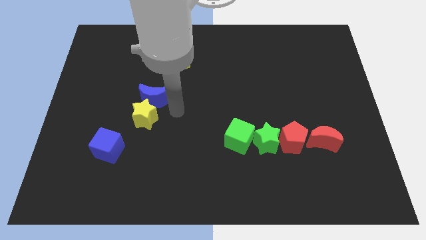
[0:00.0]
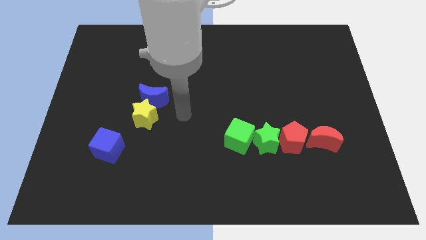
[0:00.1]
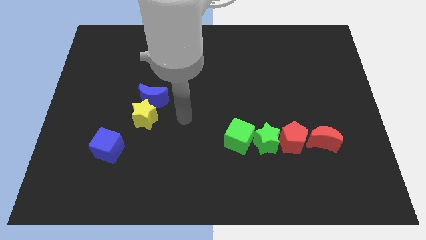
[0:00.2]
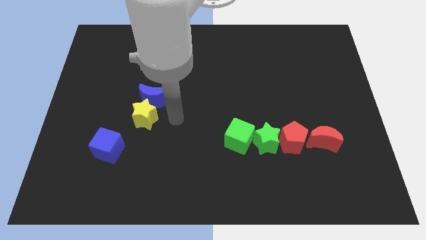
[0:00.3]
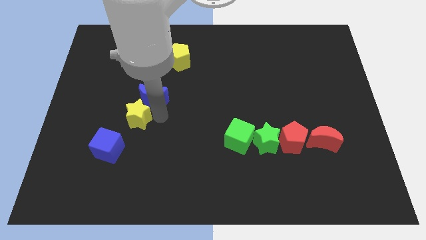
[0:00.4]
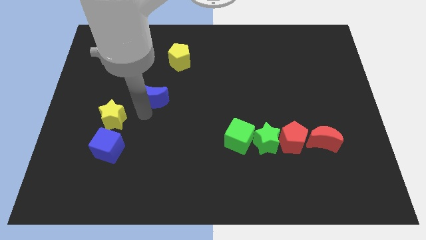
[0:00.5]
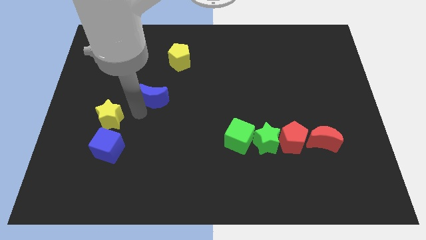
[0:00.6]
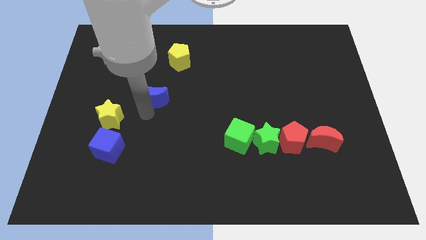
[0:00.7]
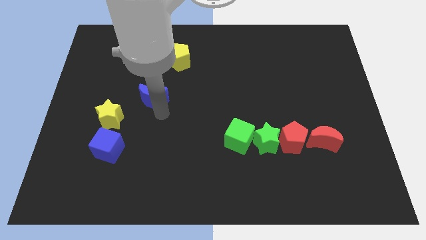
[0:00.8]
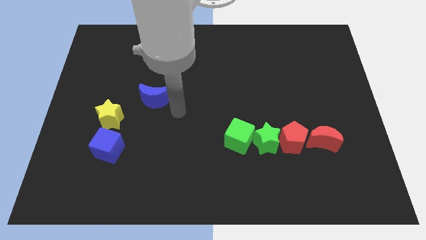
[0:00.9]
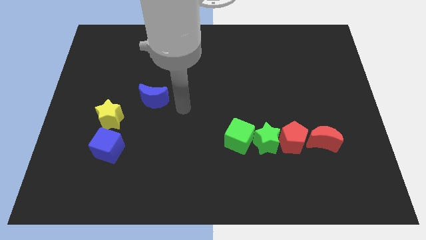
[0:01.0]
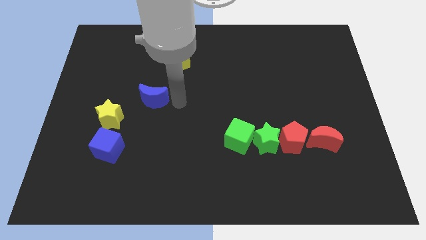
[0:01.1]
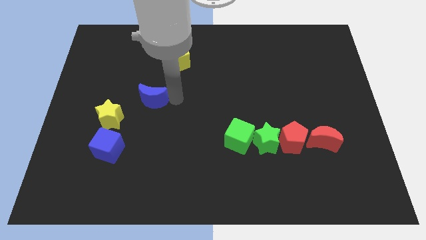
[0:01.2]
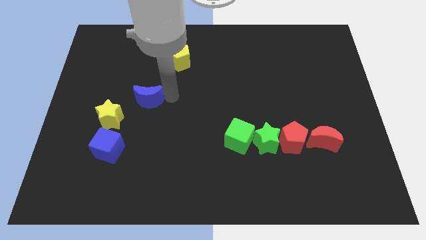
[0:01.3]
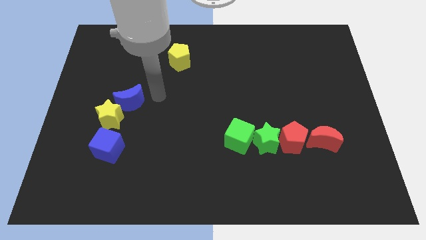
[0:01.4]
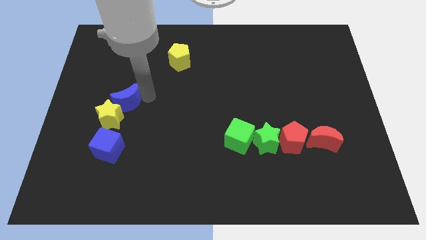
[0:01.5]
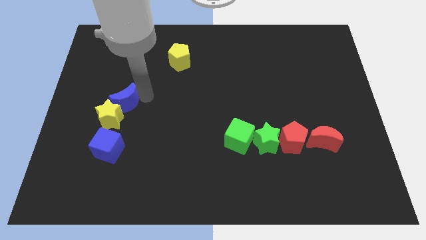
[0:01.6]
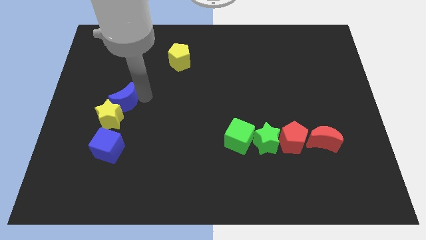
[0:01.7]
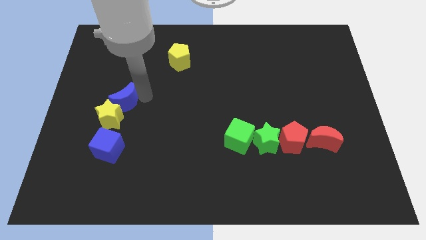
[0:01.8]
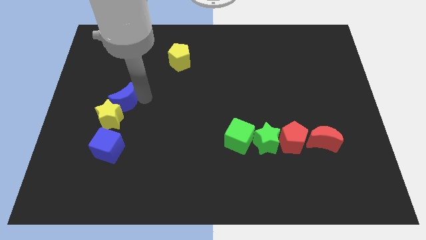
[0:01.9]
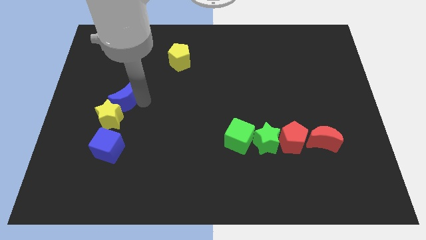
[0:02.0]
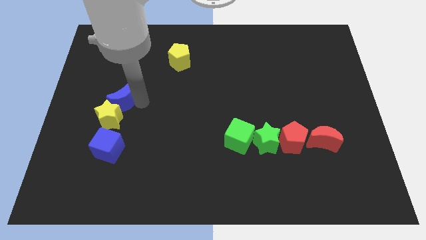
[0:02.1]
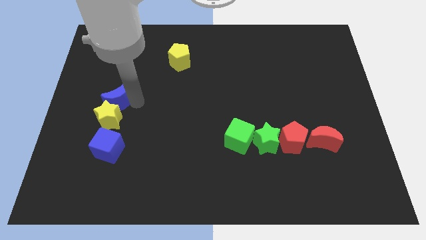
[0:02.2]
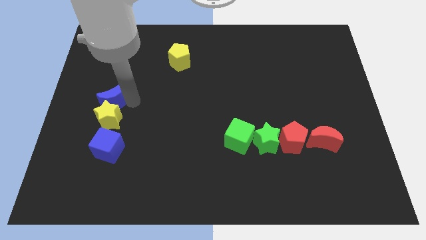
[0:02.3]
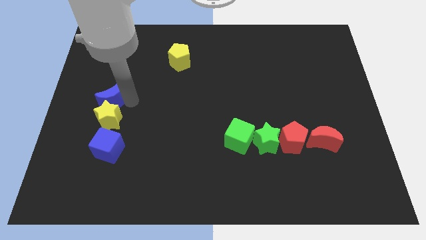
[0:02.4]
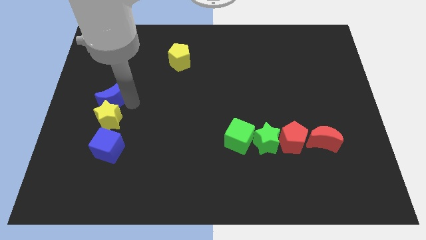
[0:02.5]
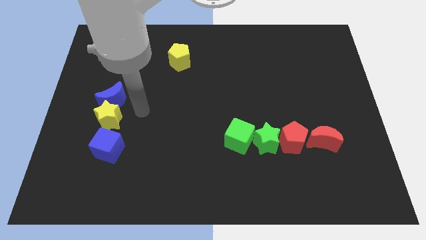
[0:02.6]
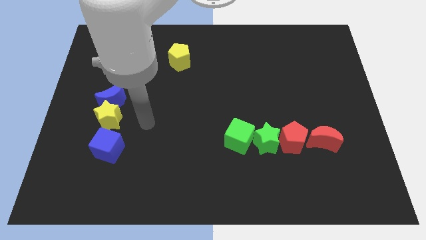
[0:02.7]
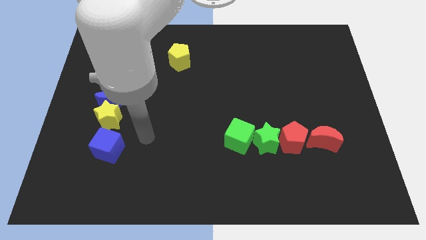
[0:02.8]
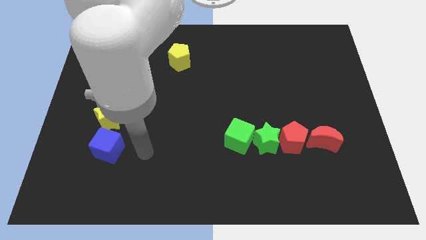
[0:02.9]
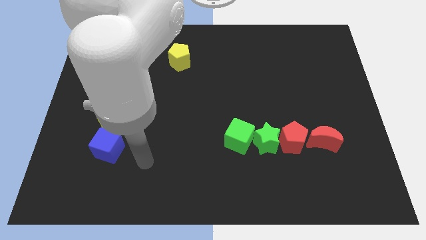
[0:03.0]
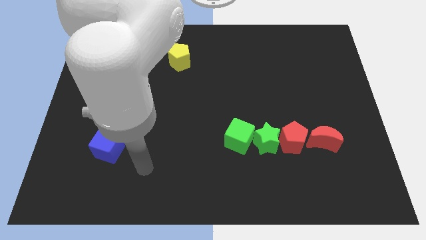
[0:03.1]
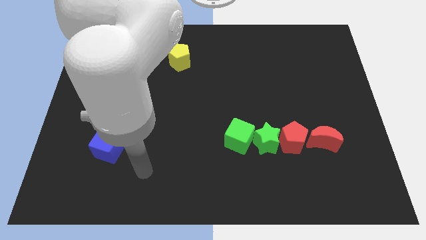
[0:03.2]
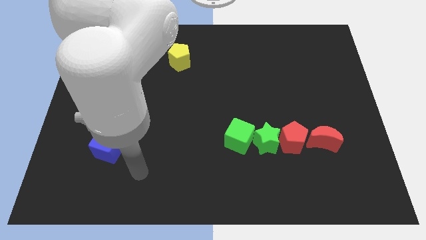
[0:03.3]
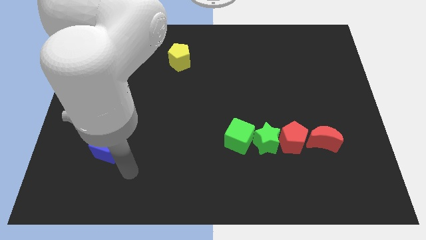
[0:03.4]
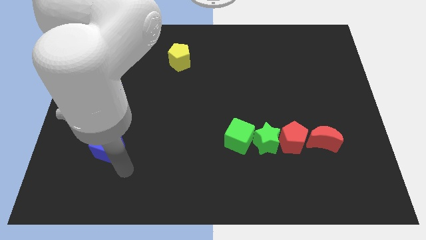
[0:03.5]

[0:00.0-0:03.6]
place the blue crescent on top of the yellow star to form a vertical line

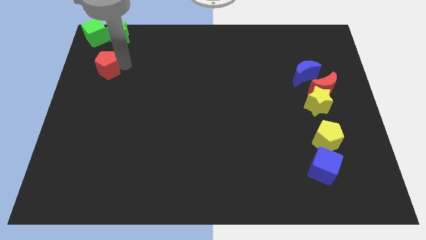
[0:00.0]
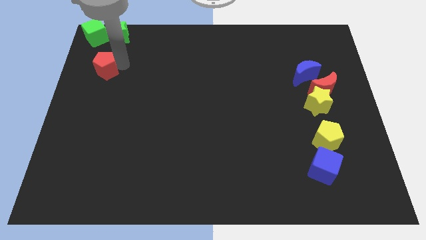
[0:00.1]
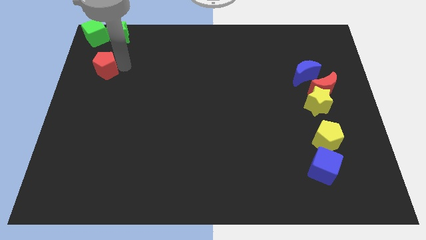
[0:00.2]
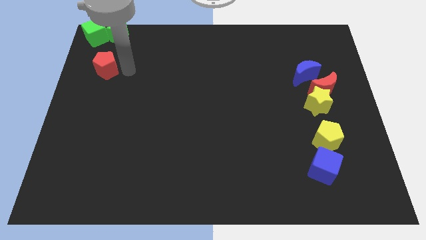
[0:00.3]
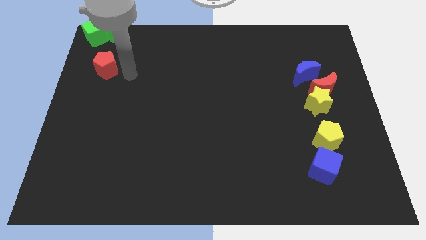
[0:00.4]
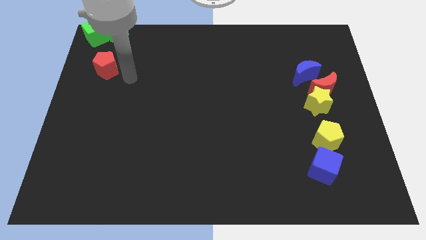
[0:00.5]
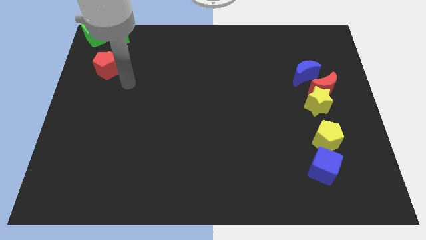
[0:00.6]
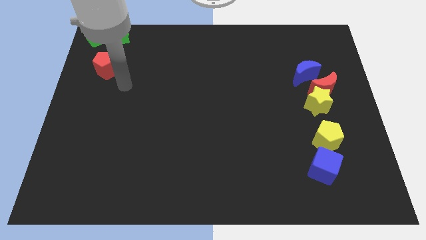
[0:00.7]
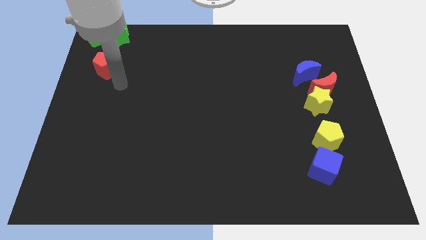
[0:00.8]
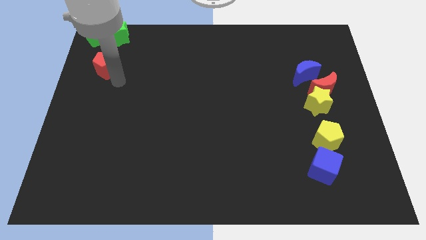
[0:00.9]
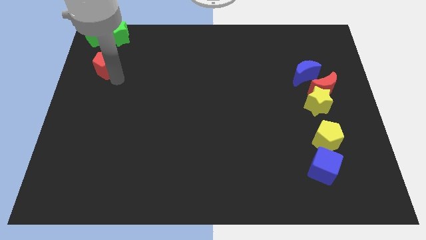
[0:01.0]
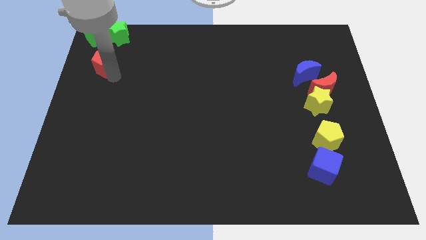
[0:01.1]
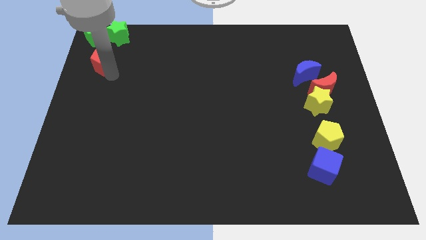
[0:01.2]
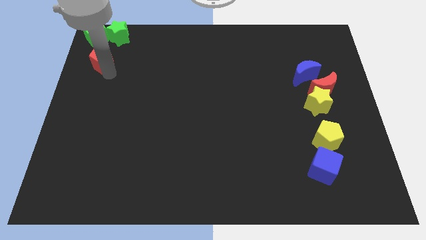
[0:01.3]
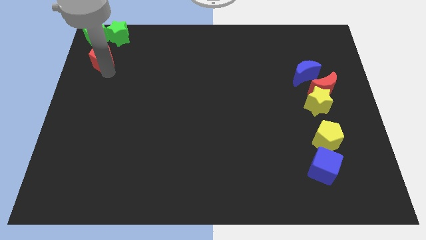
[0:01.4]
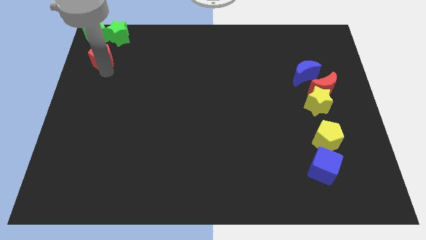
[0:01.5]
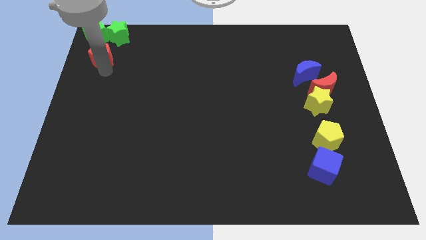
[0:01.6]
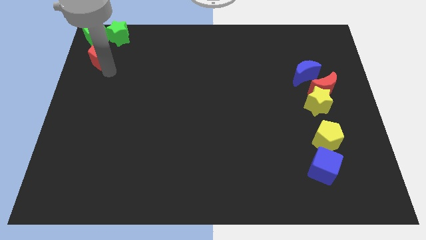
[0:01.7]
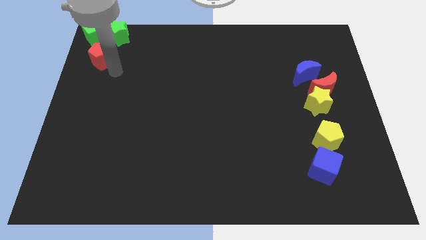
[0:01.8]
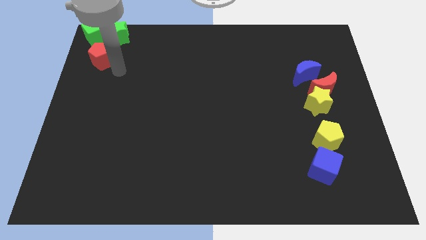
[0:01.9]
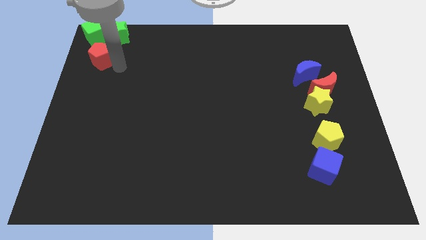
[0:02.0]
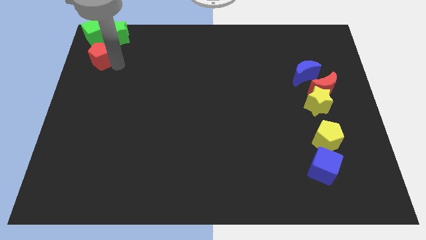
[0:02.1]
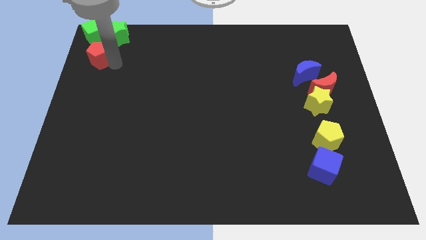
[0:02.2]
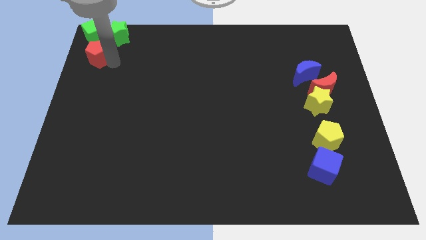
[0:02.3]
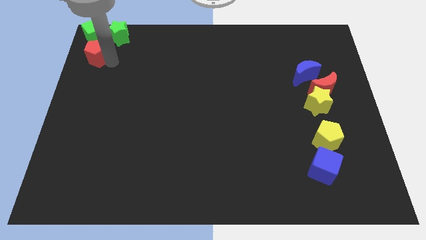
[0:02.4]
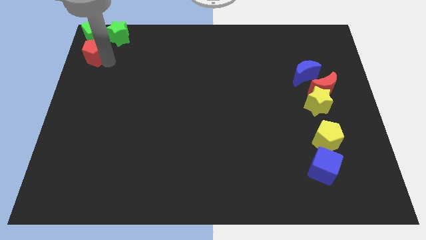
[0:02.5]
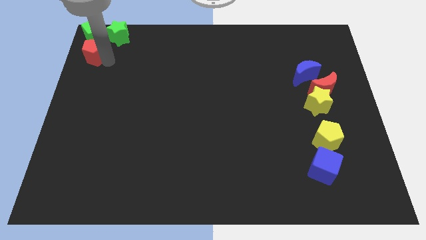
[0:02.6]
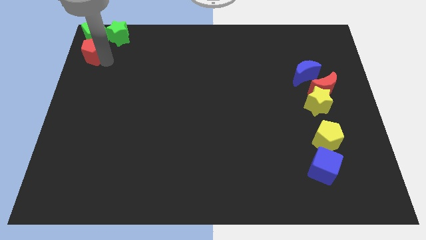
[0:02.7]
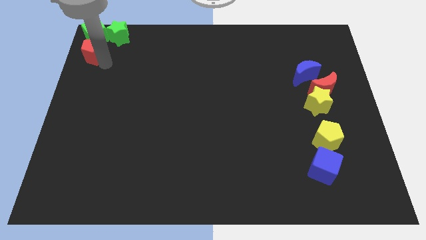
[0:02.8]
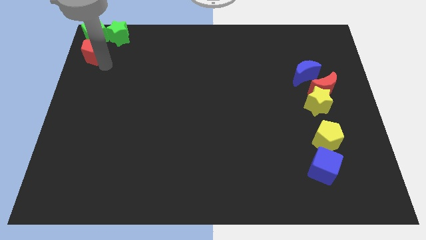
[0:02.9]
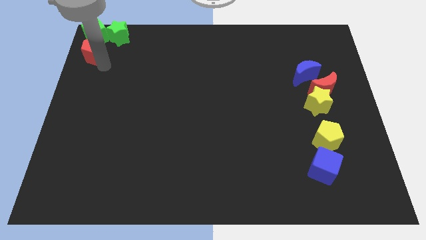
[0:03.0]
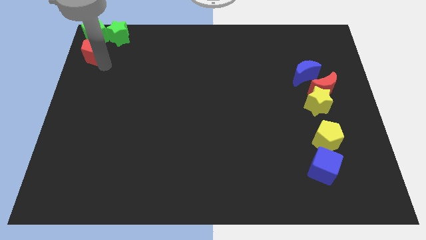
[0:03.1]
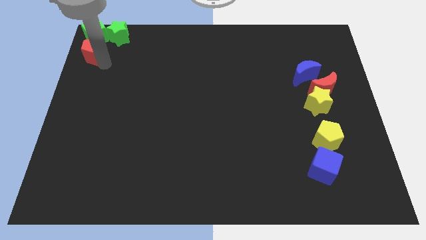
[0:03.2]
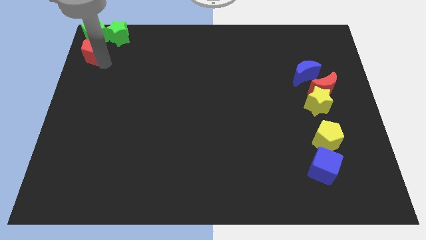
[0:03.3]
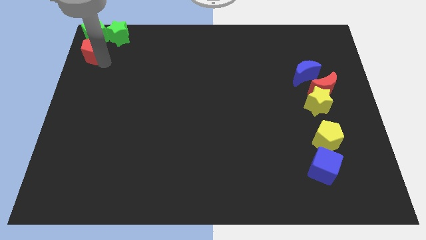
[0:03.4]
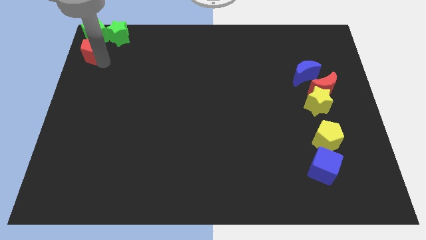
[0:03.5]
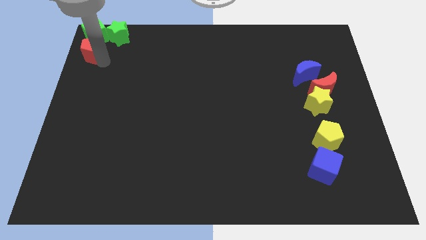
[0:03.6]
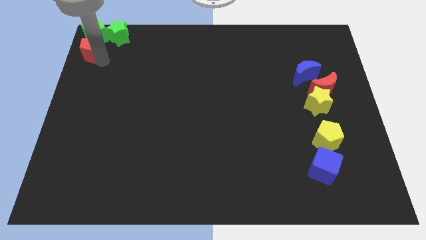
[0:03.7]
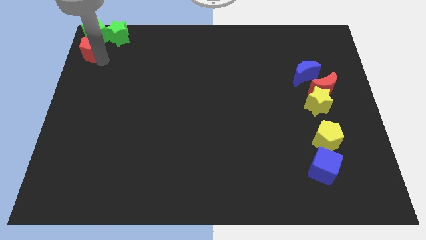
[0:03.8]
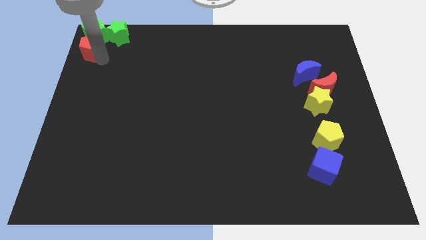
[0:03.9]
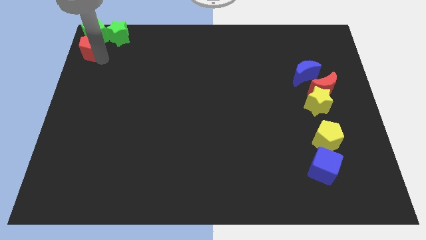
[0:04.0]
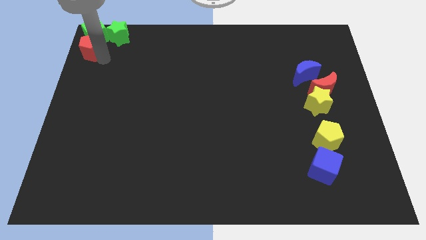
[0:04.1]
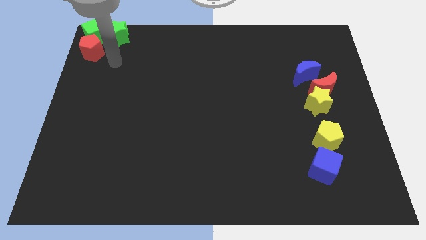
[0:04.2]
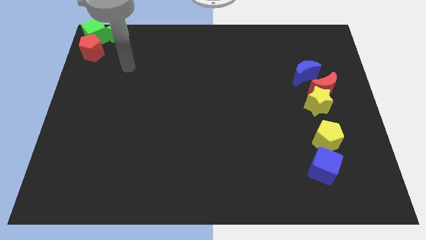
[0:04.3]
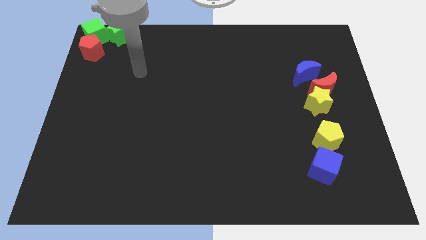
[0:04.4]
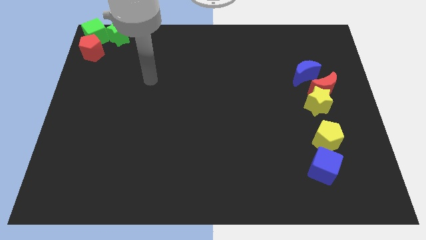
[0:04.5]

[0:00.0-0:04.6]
slide the red pentagon into the green cube

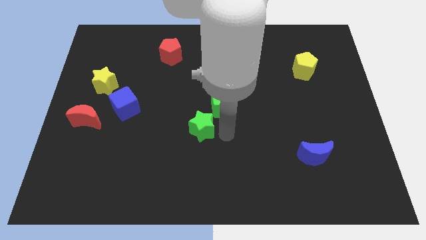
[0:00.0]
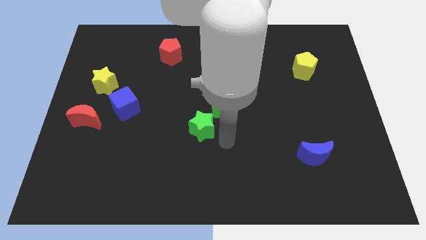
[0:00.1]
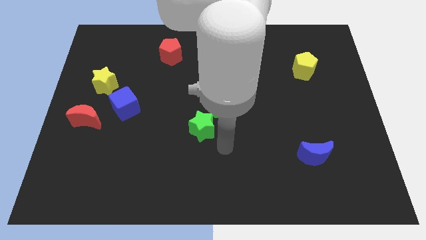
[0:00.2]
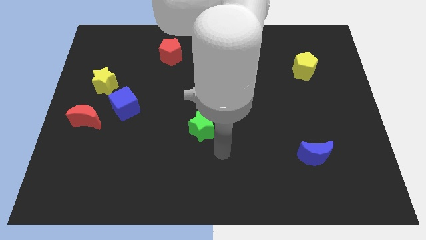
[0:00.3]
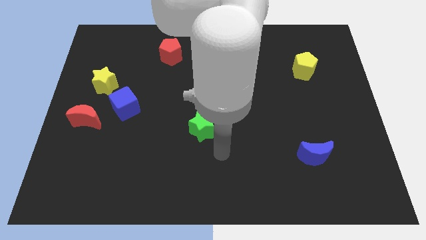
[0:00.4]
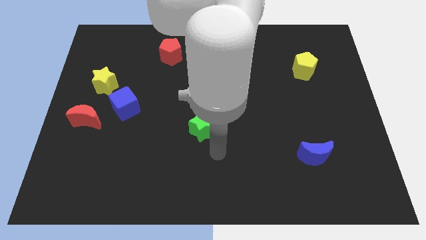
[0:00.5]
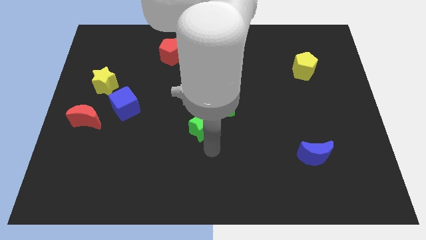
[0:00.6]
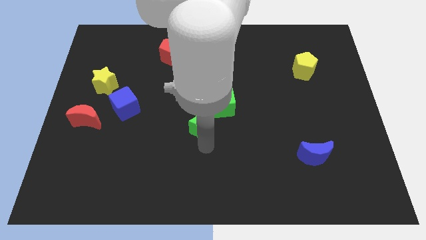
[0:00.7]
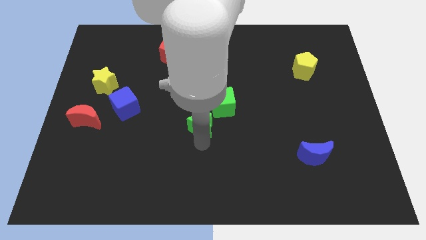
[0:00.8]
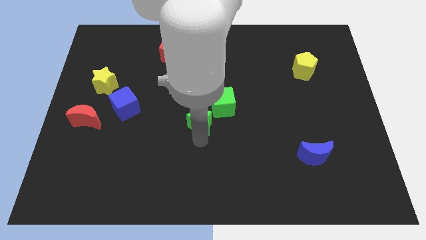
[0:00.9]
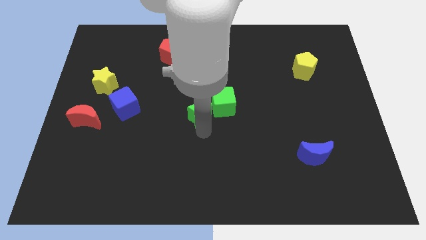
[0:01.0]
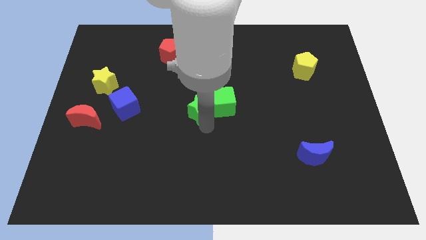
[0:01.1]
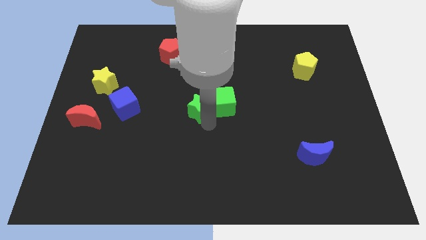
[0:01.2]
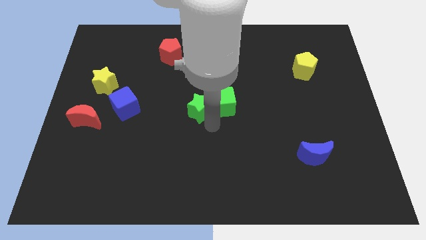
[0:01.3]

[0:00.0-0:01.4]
move the green star to the left side of the green cube
